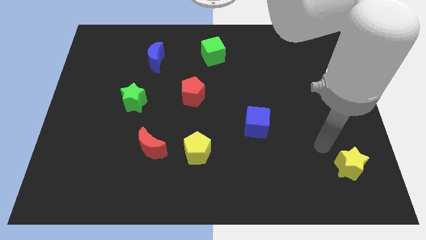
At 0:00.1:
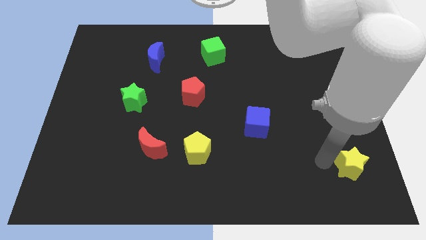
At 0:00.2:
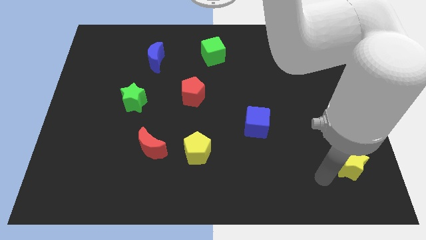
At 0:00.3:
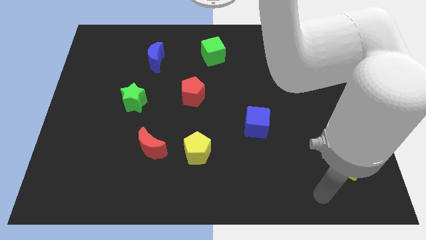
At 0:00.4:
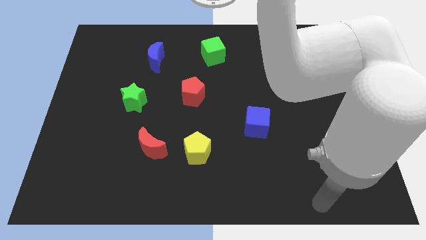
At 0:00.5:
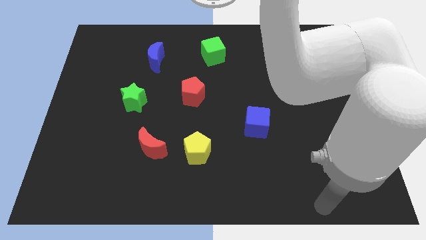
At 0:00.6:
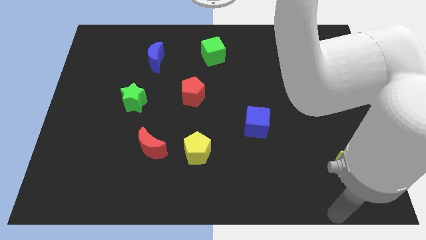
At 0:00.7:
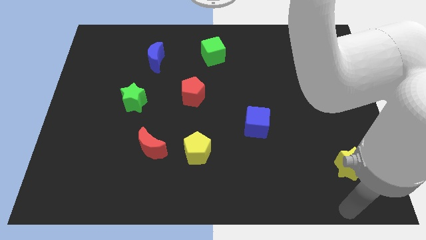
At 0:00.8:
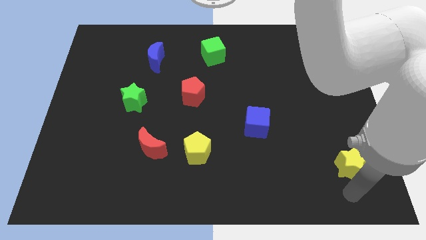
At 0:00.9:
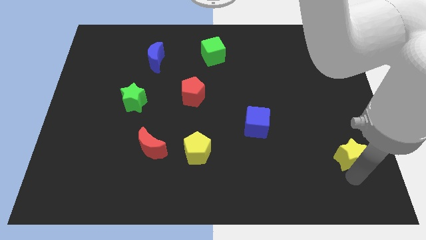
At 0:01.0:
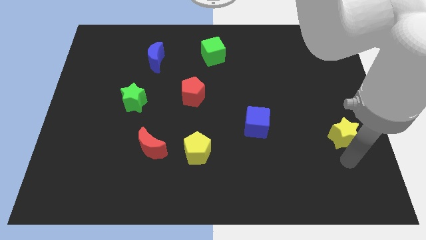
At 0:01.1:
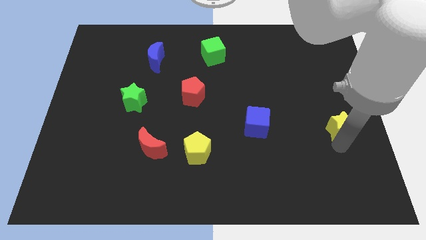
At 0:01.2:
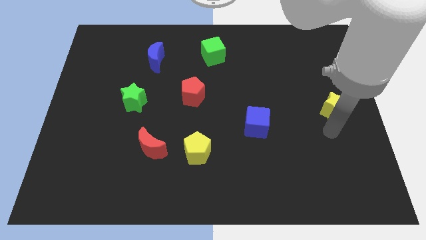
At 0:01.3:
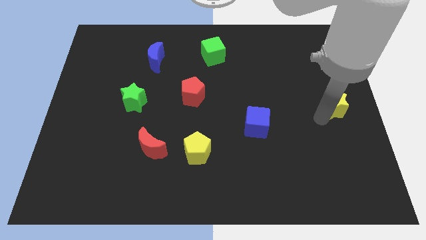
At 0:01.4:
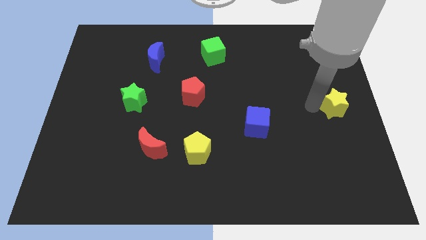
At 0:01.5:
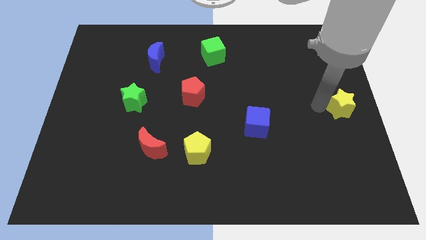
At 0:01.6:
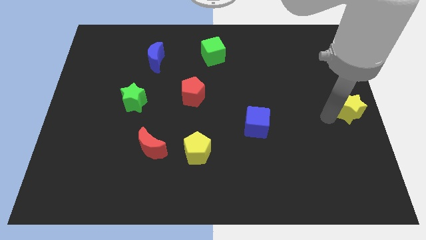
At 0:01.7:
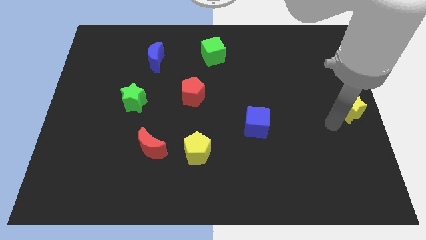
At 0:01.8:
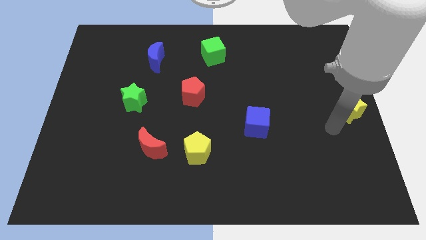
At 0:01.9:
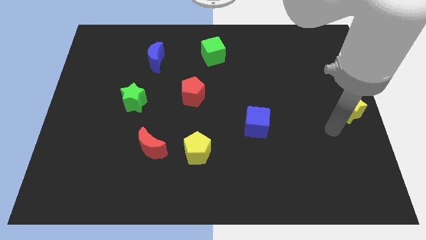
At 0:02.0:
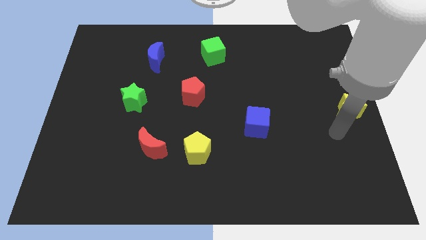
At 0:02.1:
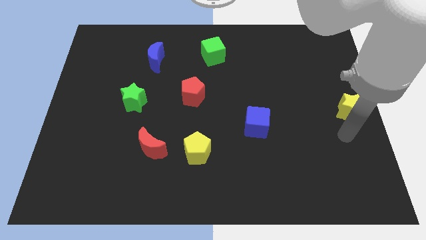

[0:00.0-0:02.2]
move yellow star to the center right

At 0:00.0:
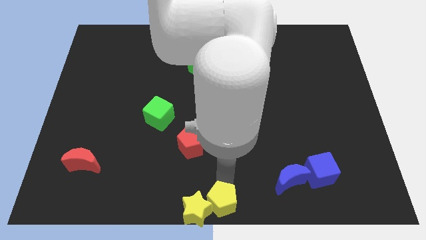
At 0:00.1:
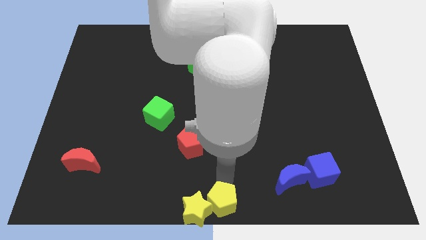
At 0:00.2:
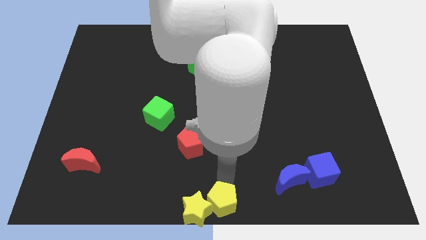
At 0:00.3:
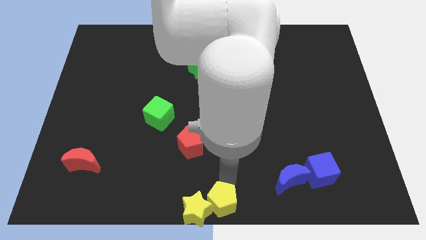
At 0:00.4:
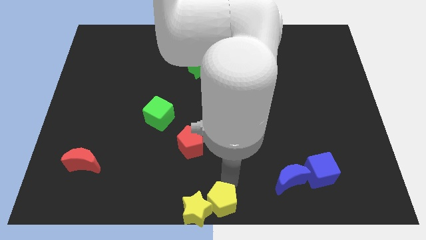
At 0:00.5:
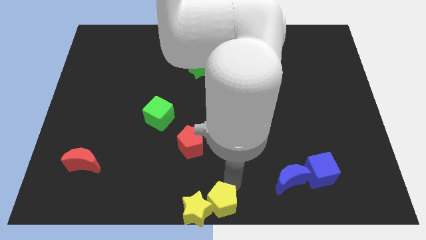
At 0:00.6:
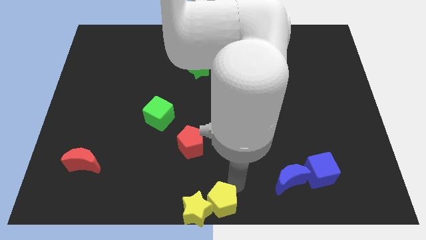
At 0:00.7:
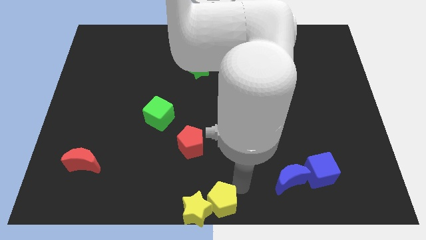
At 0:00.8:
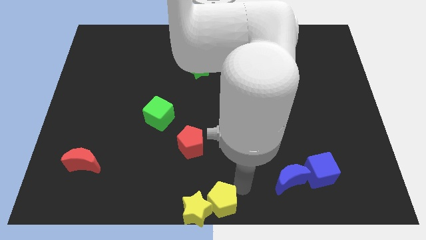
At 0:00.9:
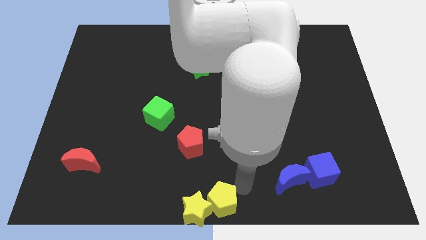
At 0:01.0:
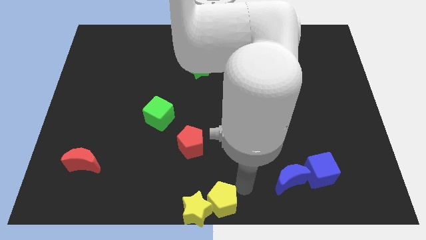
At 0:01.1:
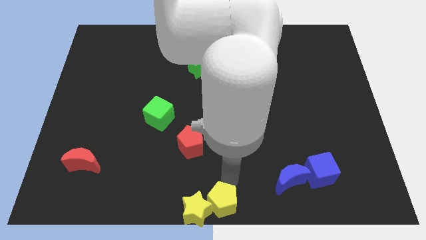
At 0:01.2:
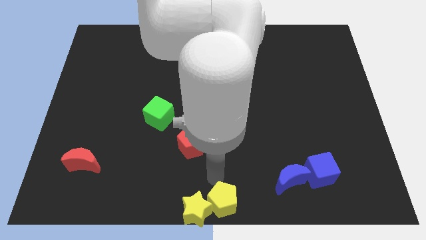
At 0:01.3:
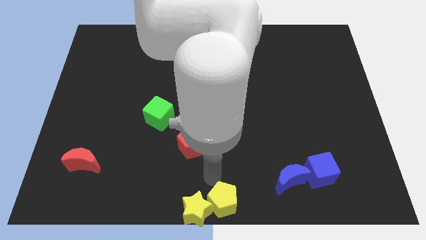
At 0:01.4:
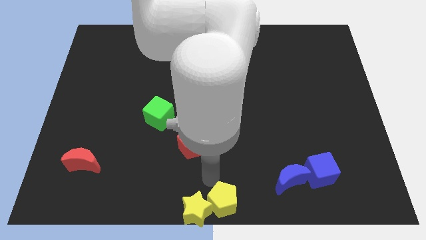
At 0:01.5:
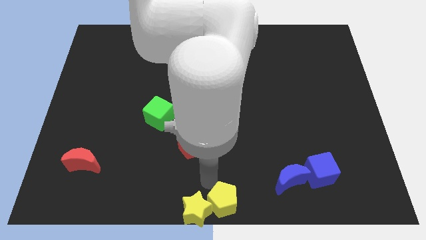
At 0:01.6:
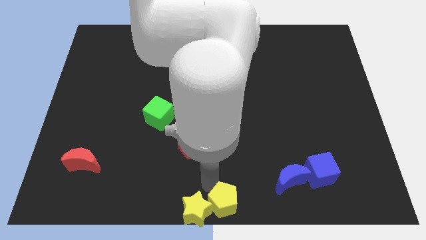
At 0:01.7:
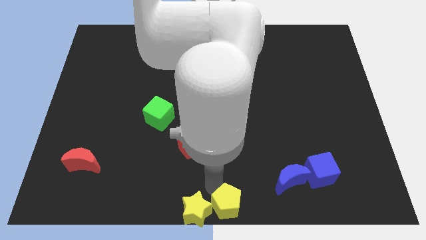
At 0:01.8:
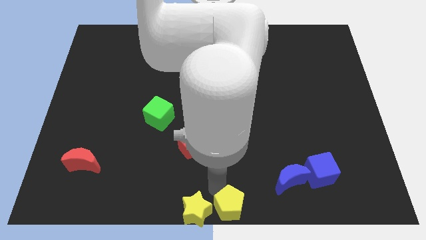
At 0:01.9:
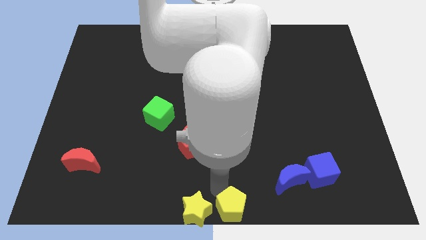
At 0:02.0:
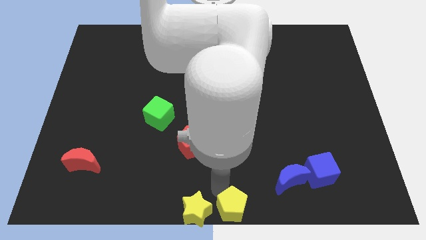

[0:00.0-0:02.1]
move the yellow pentagon to the bottom center on the board

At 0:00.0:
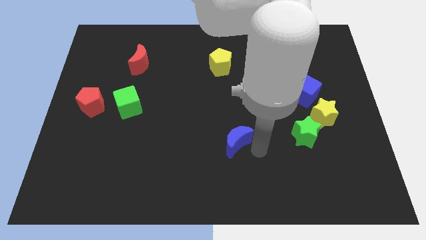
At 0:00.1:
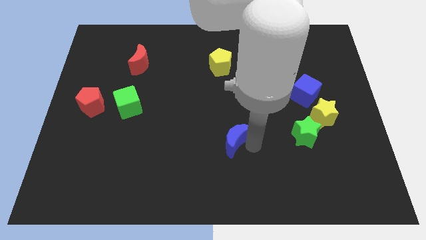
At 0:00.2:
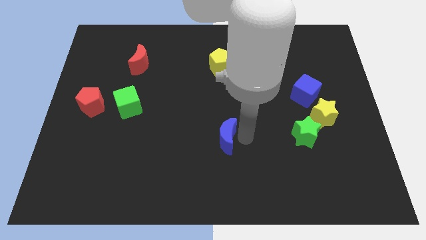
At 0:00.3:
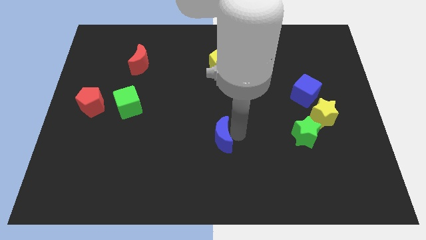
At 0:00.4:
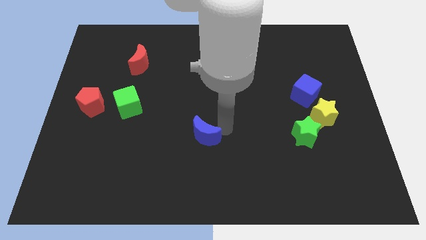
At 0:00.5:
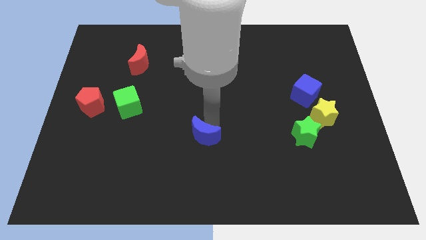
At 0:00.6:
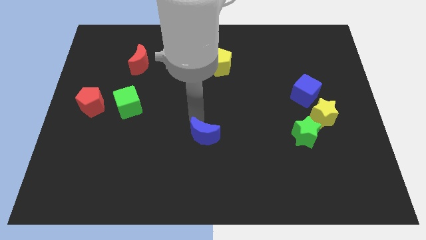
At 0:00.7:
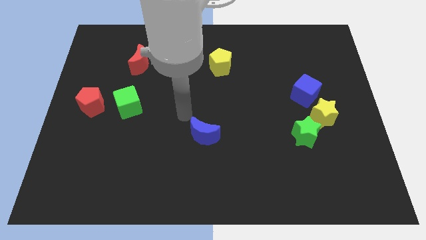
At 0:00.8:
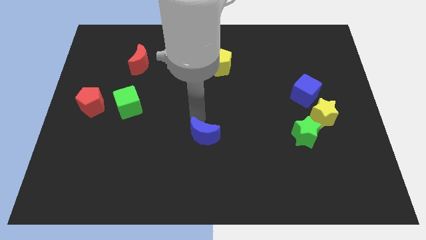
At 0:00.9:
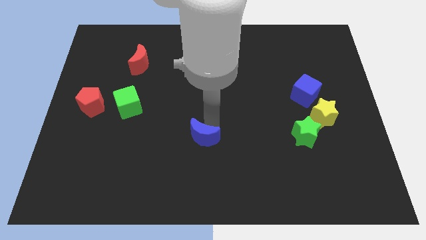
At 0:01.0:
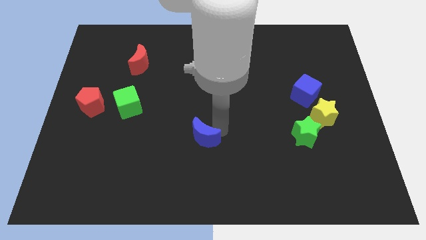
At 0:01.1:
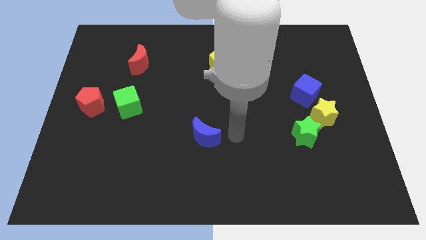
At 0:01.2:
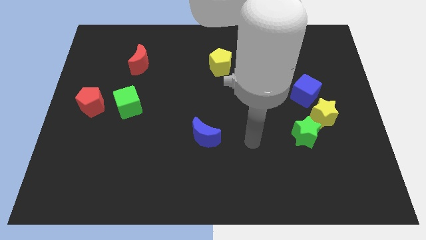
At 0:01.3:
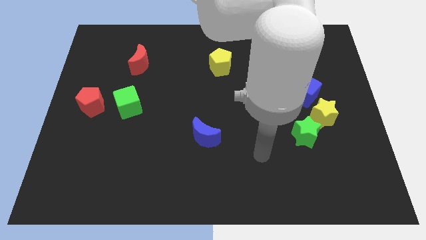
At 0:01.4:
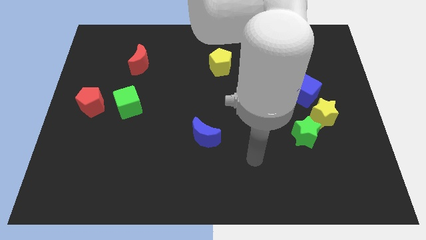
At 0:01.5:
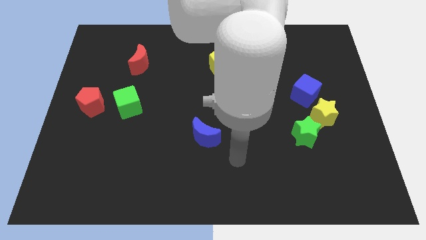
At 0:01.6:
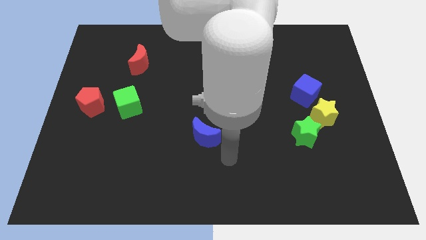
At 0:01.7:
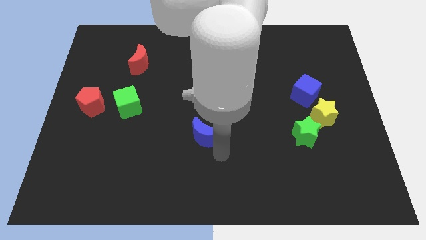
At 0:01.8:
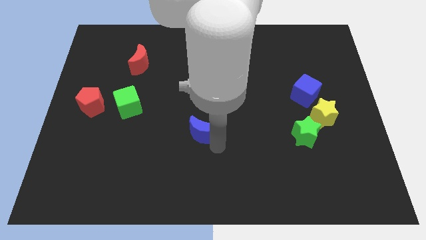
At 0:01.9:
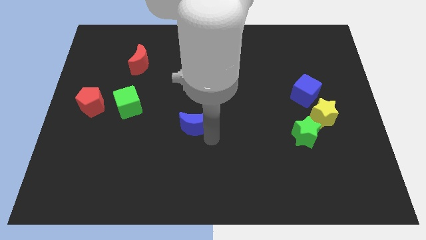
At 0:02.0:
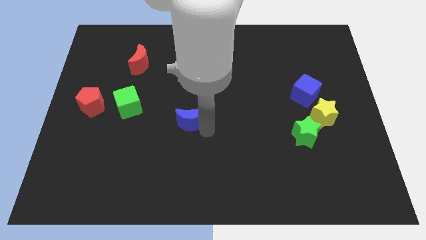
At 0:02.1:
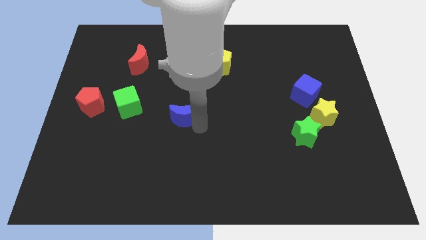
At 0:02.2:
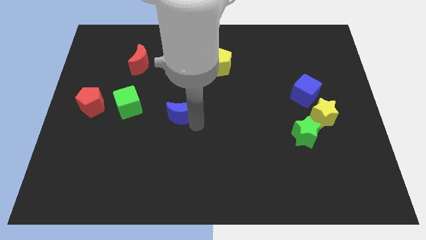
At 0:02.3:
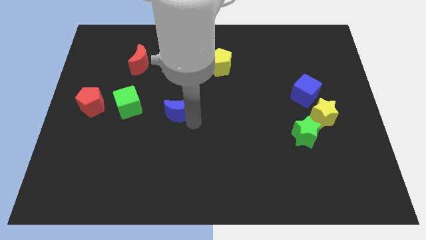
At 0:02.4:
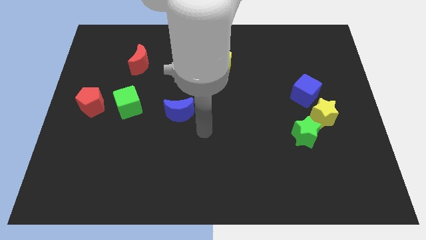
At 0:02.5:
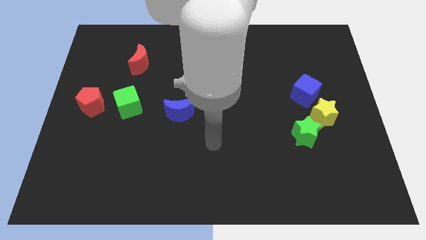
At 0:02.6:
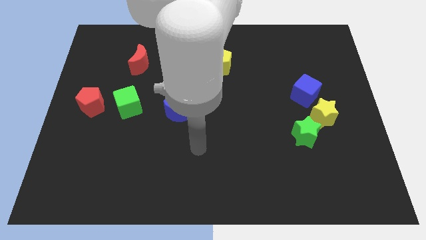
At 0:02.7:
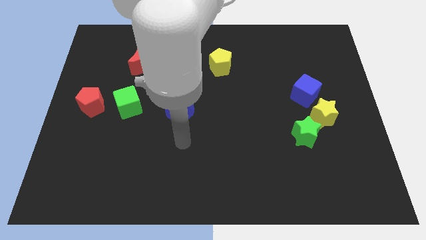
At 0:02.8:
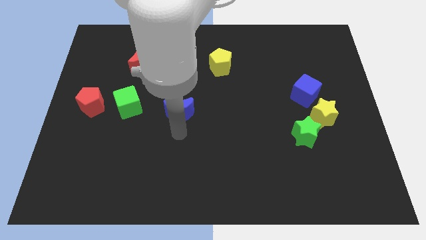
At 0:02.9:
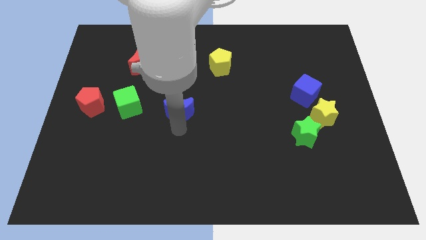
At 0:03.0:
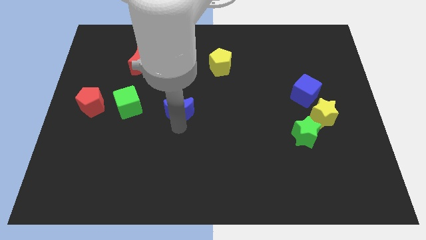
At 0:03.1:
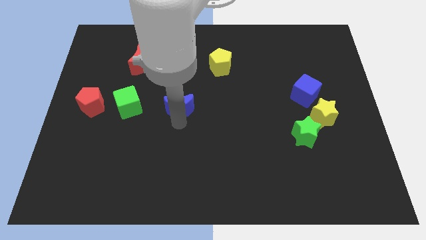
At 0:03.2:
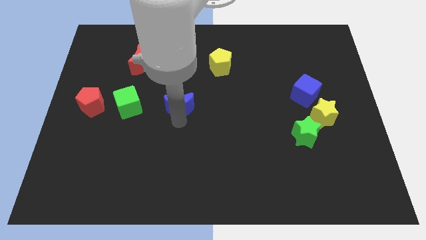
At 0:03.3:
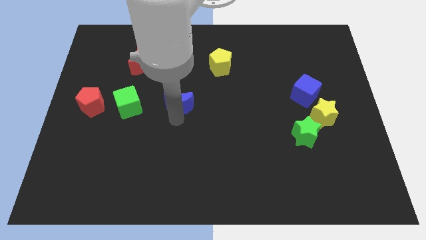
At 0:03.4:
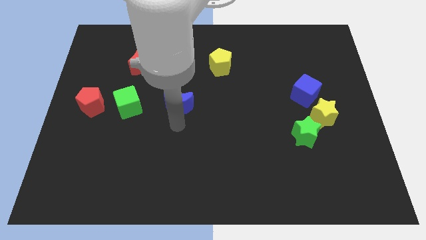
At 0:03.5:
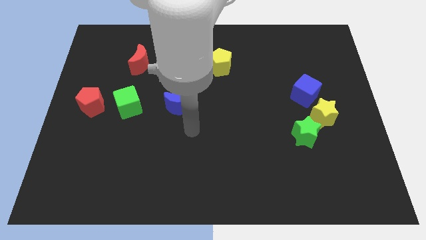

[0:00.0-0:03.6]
move the blue crescent to the right of the green cube

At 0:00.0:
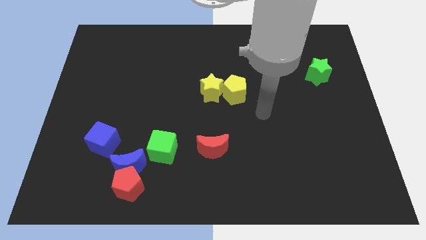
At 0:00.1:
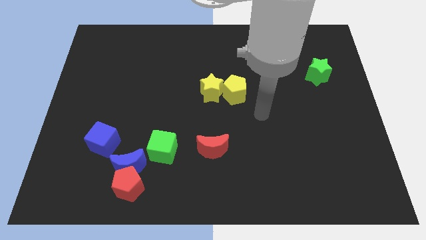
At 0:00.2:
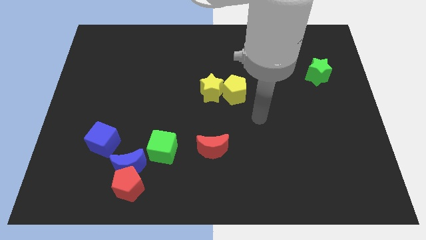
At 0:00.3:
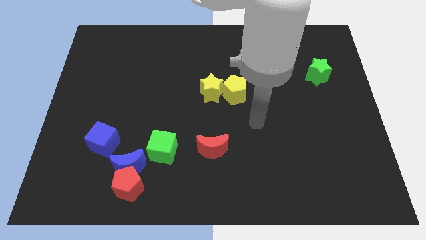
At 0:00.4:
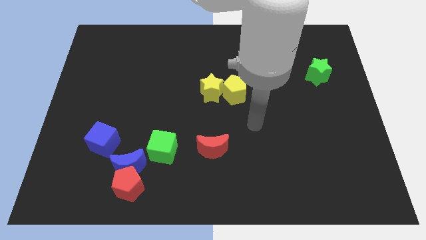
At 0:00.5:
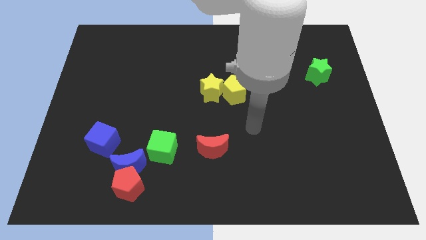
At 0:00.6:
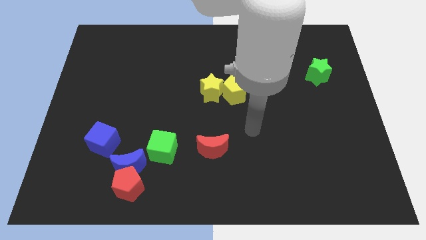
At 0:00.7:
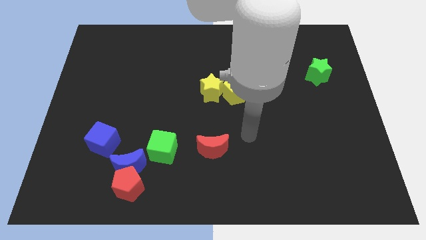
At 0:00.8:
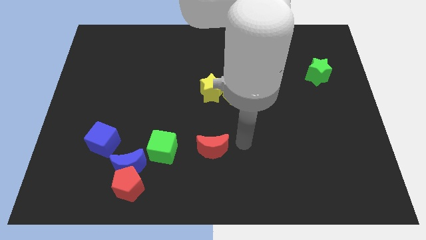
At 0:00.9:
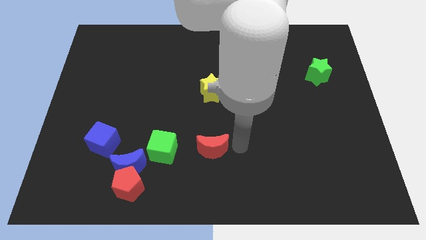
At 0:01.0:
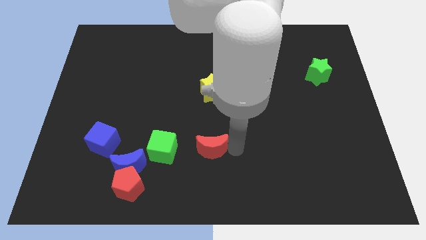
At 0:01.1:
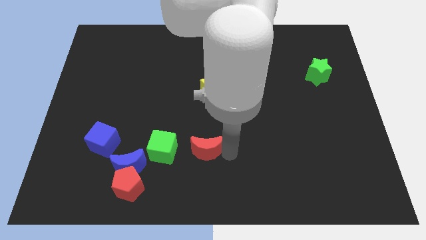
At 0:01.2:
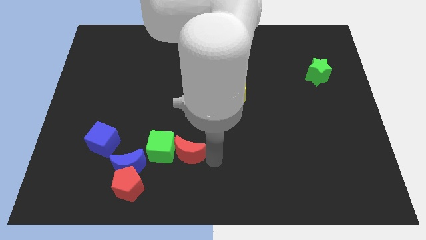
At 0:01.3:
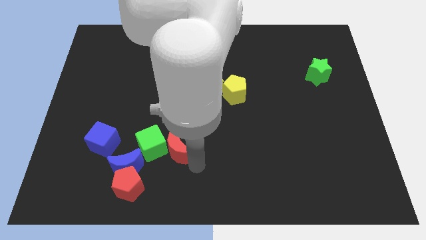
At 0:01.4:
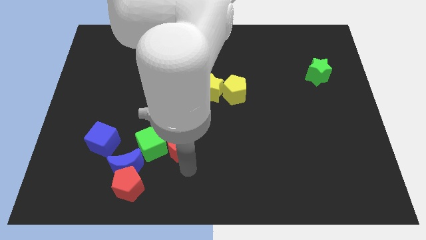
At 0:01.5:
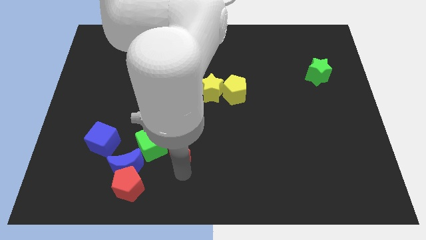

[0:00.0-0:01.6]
slide the red moon diagonally to the bottom left of the yellow pentagon
